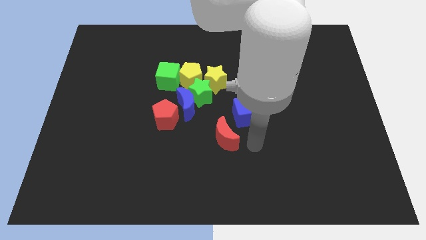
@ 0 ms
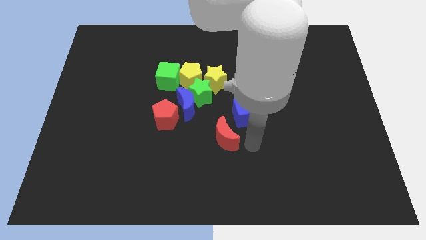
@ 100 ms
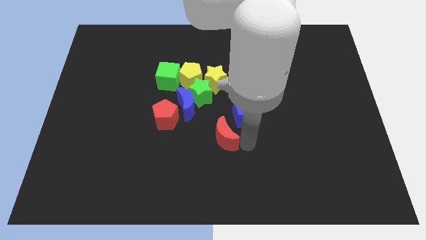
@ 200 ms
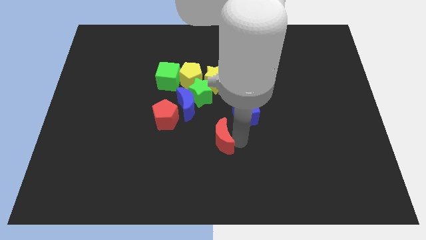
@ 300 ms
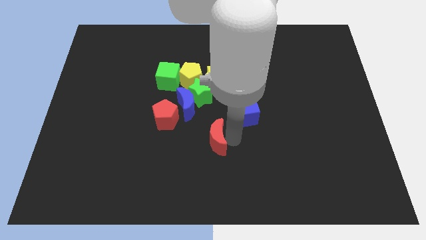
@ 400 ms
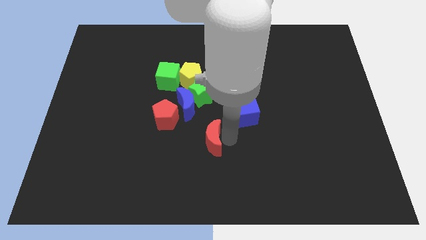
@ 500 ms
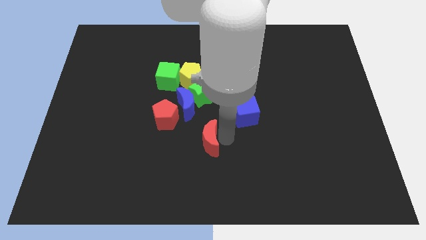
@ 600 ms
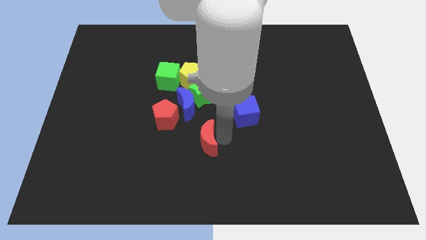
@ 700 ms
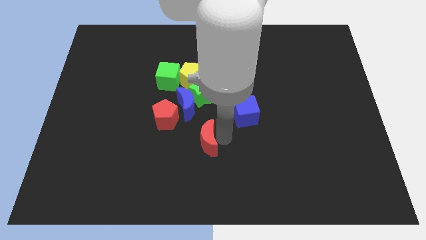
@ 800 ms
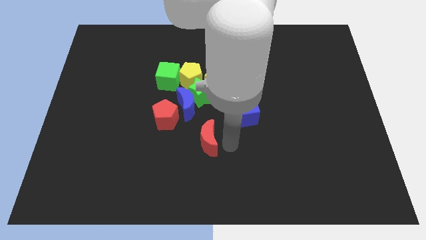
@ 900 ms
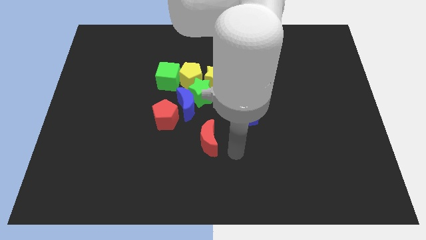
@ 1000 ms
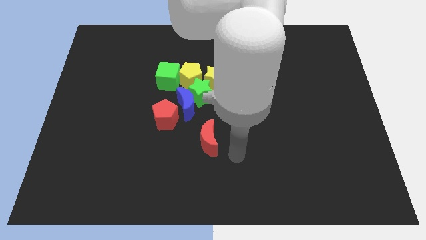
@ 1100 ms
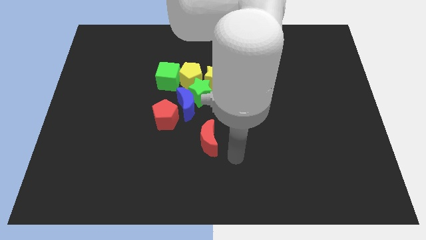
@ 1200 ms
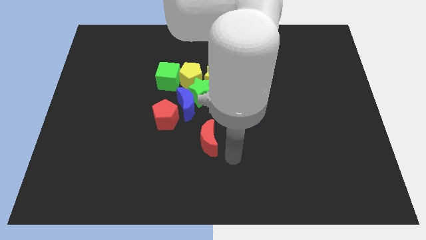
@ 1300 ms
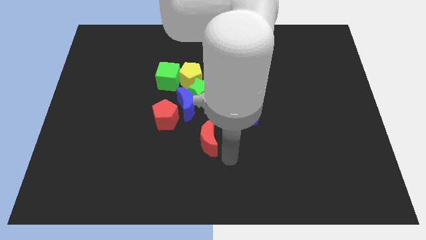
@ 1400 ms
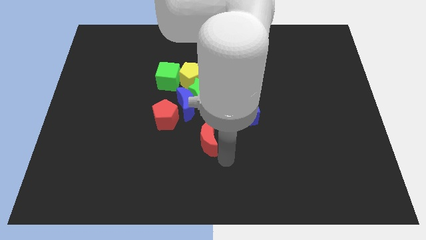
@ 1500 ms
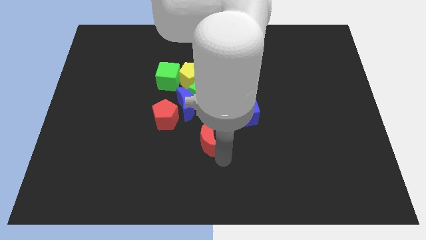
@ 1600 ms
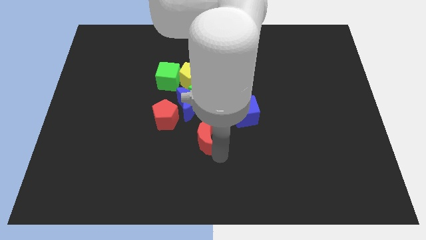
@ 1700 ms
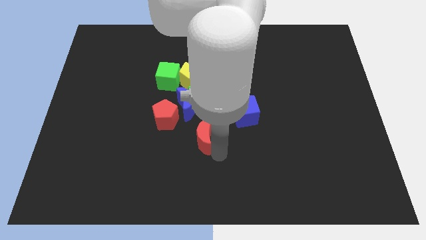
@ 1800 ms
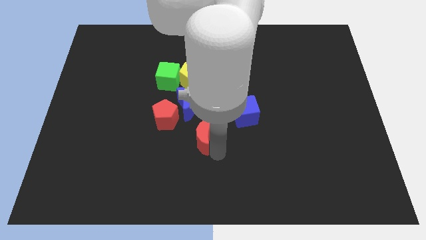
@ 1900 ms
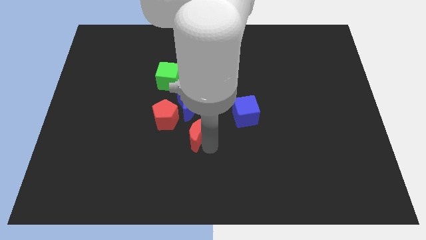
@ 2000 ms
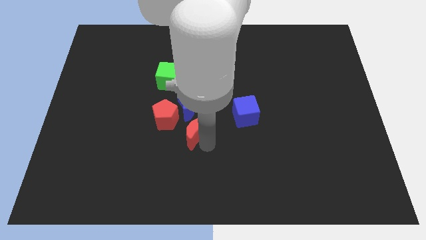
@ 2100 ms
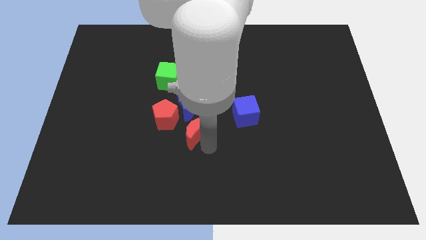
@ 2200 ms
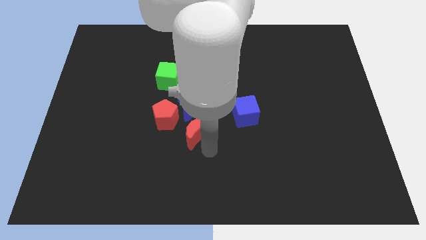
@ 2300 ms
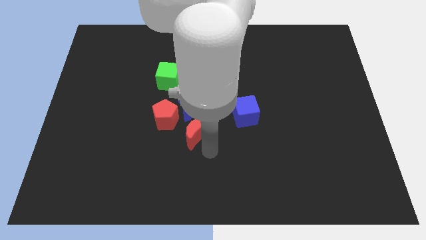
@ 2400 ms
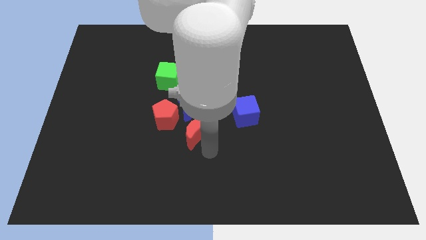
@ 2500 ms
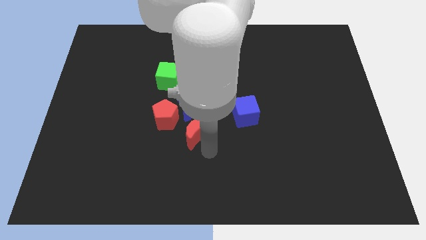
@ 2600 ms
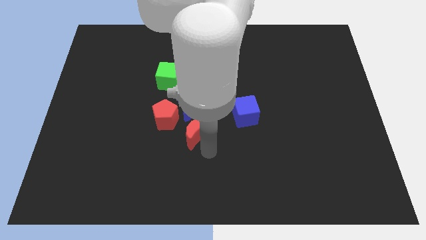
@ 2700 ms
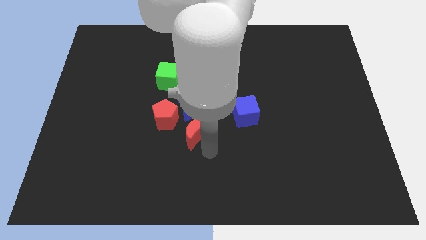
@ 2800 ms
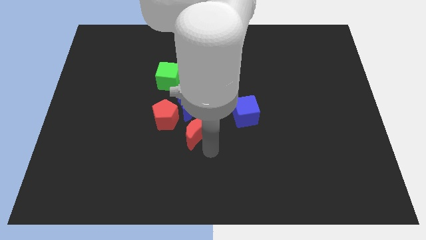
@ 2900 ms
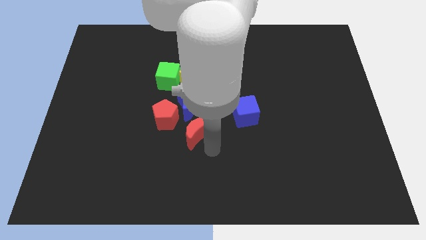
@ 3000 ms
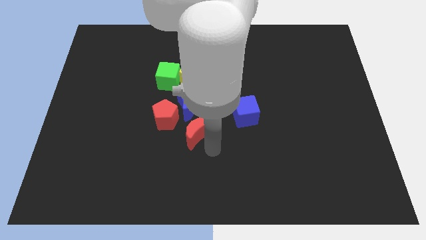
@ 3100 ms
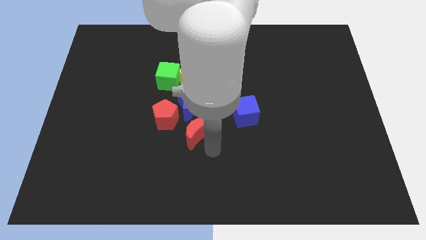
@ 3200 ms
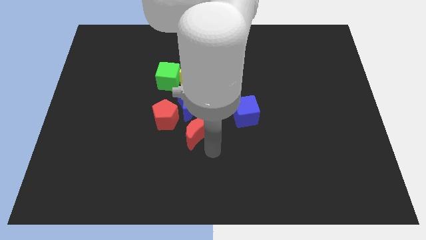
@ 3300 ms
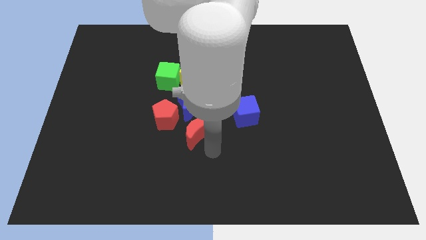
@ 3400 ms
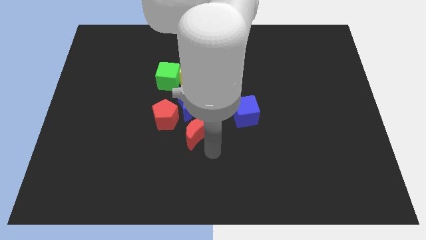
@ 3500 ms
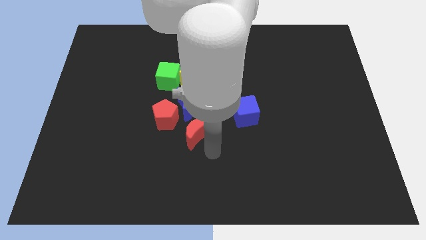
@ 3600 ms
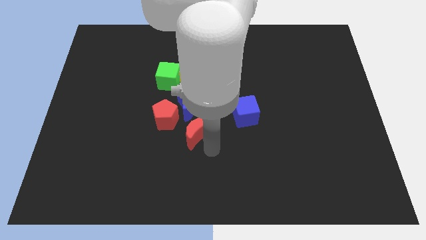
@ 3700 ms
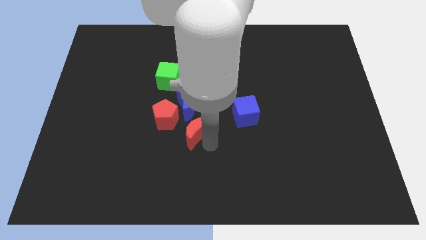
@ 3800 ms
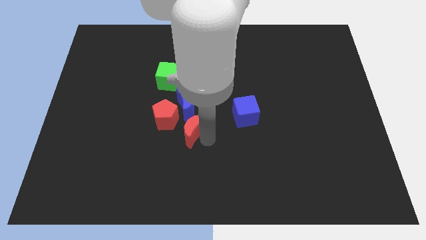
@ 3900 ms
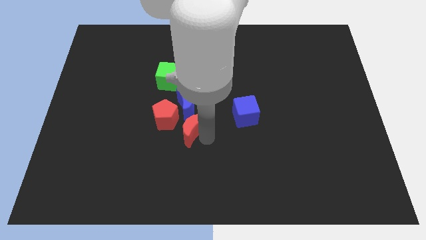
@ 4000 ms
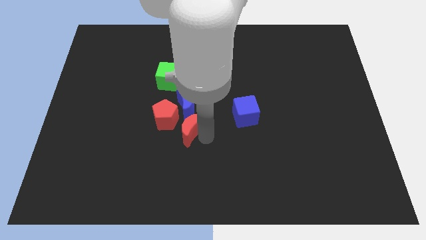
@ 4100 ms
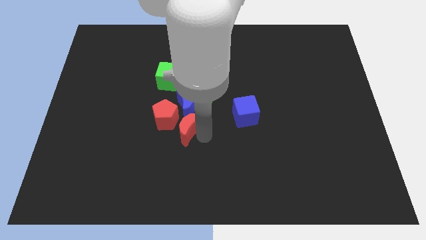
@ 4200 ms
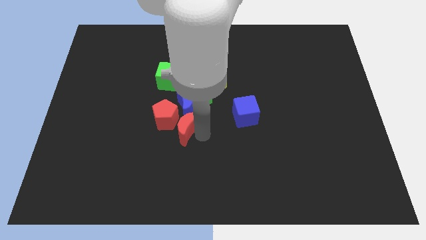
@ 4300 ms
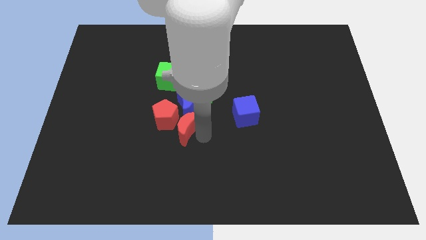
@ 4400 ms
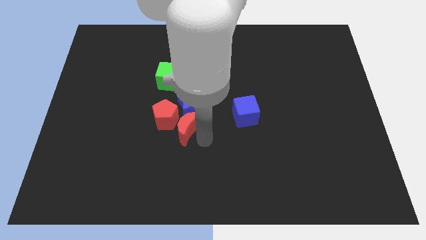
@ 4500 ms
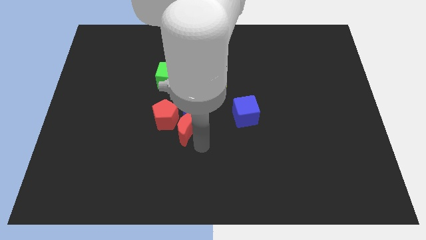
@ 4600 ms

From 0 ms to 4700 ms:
place the red crescent below the blue crescent

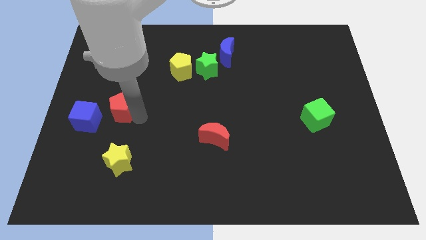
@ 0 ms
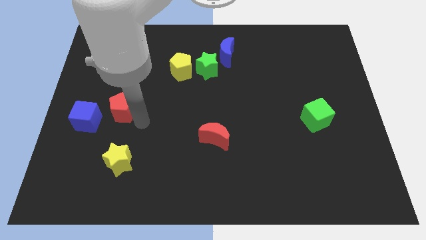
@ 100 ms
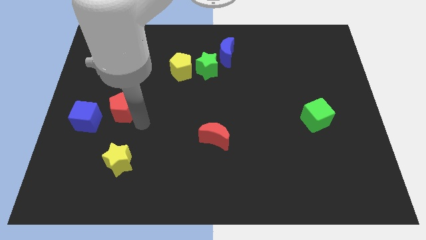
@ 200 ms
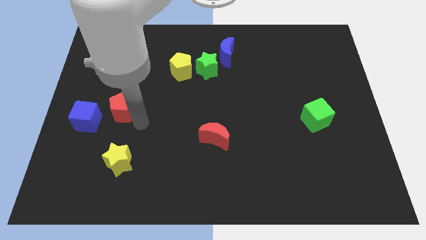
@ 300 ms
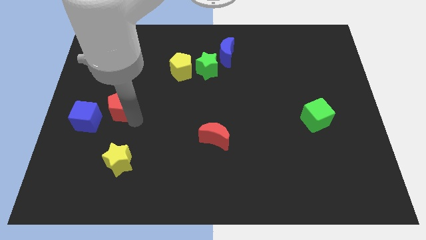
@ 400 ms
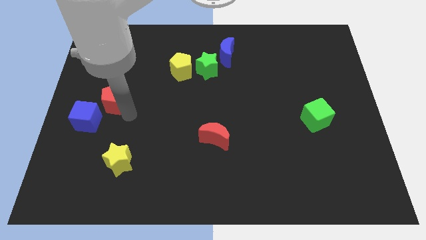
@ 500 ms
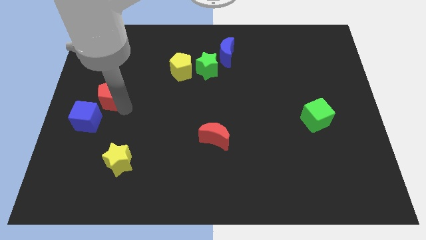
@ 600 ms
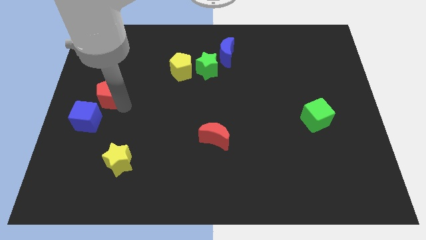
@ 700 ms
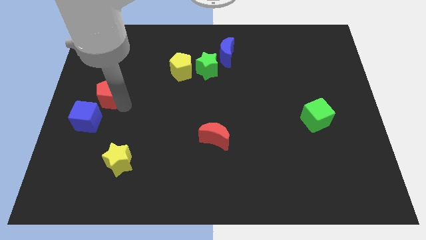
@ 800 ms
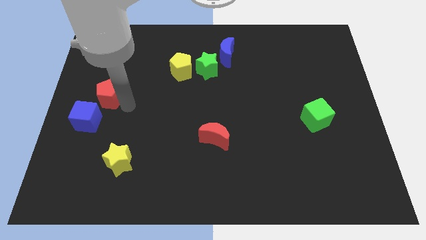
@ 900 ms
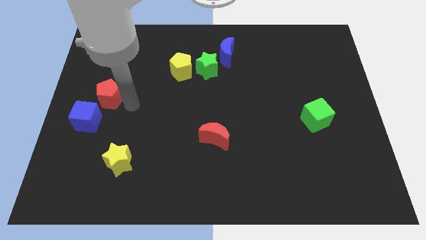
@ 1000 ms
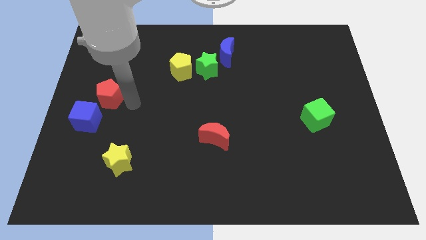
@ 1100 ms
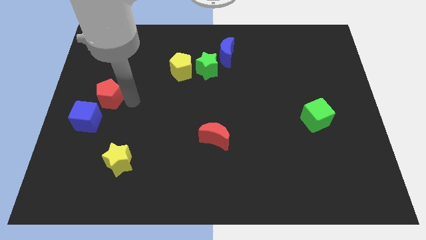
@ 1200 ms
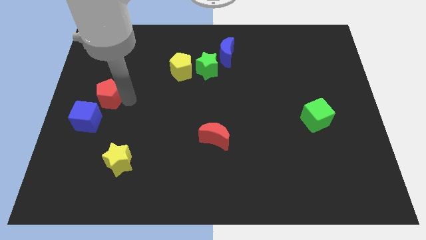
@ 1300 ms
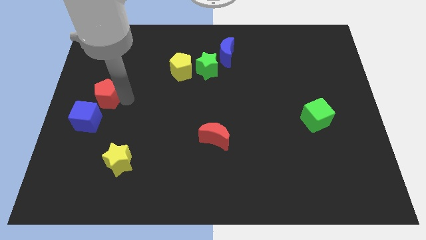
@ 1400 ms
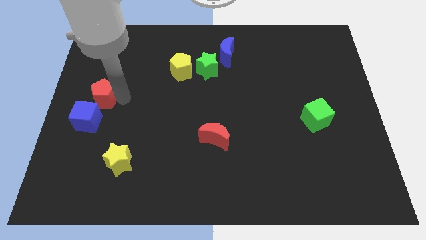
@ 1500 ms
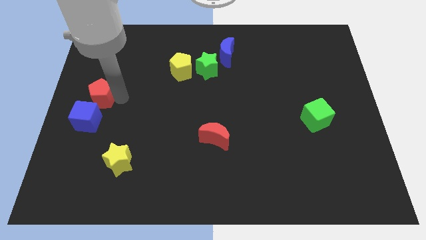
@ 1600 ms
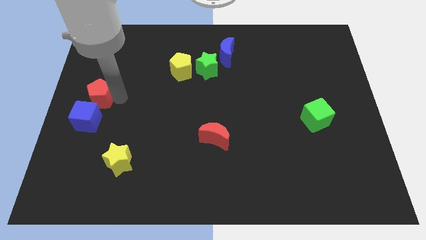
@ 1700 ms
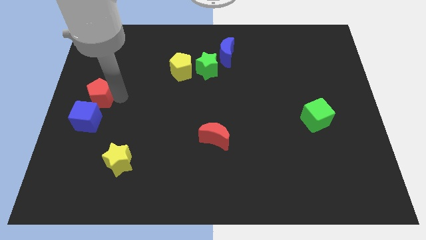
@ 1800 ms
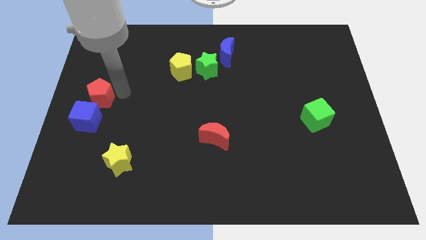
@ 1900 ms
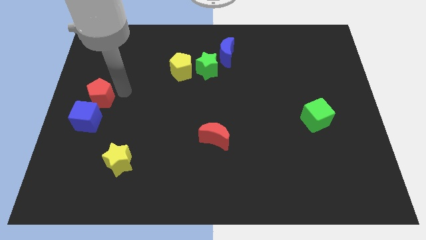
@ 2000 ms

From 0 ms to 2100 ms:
place the red pentagon to the top side of the blue cube

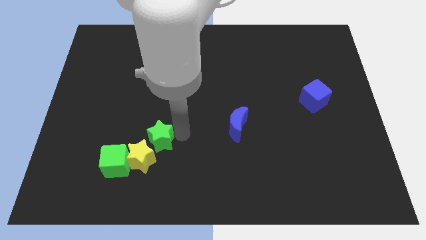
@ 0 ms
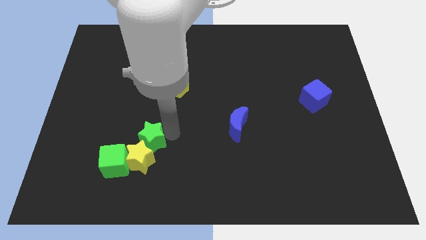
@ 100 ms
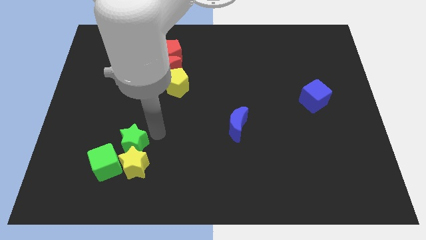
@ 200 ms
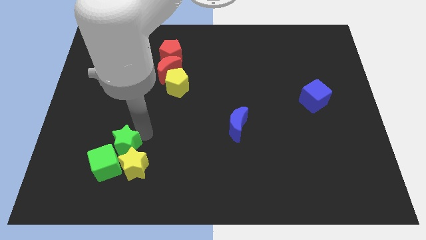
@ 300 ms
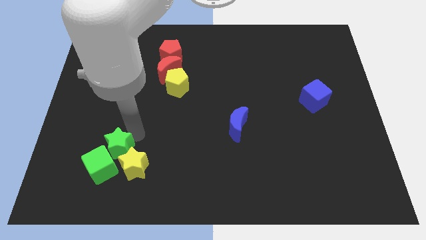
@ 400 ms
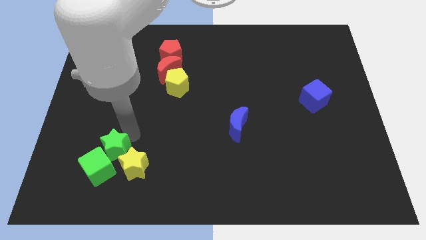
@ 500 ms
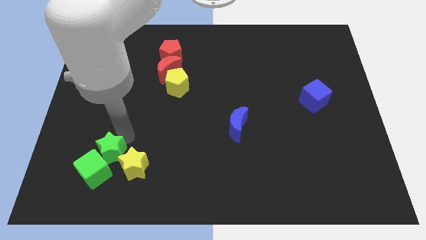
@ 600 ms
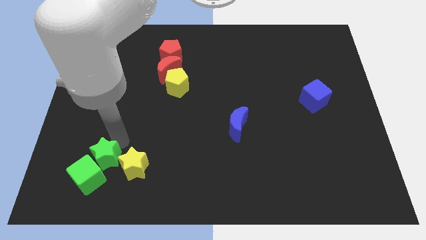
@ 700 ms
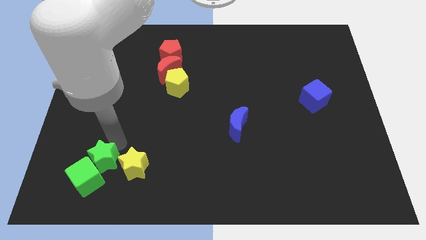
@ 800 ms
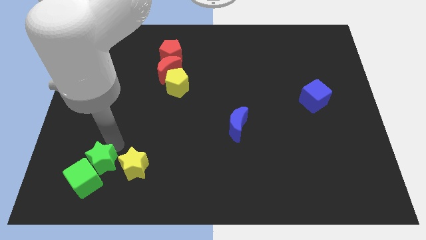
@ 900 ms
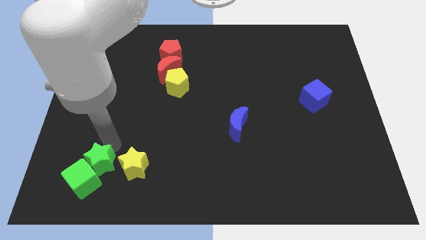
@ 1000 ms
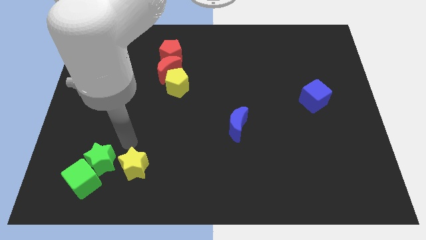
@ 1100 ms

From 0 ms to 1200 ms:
push green star into the green cube

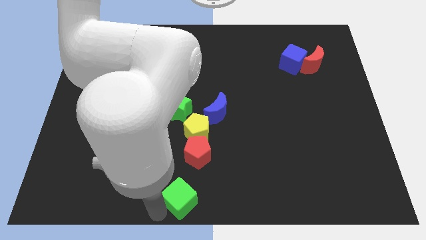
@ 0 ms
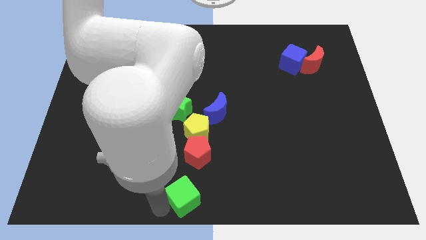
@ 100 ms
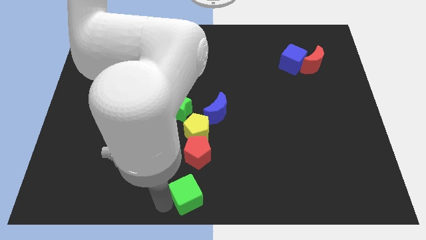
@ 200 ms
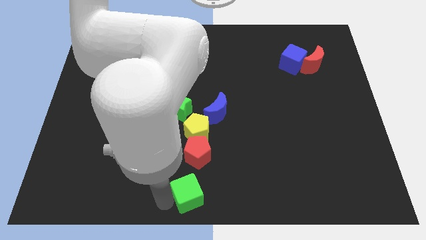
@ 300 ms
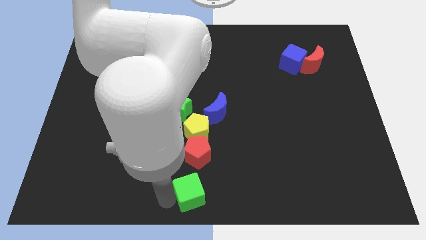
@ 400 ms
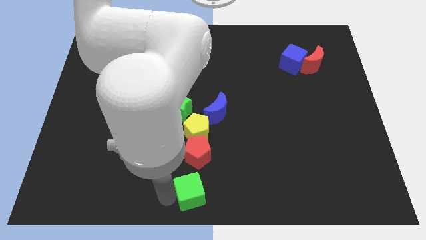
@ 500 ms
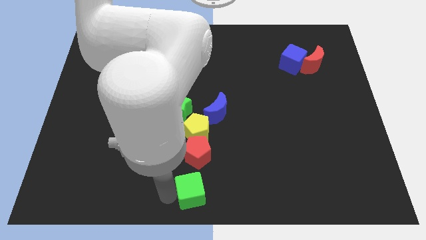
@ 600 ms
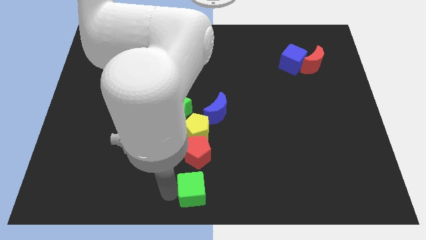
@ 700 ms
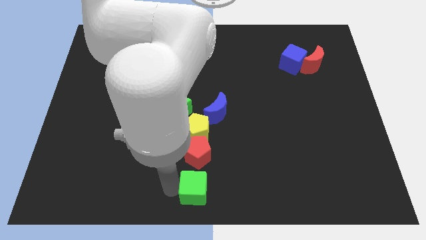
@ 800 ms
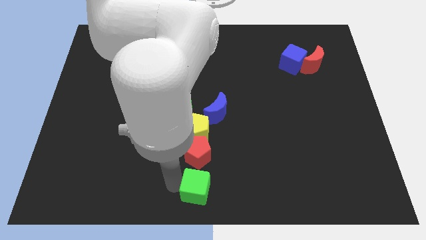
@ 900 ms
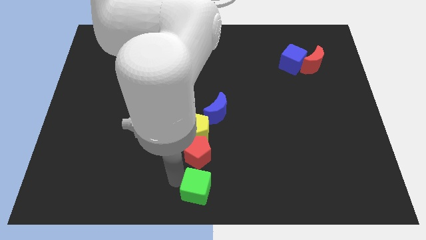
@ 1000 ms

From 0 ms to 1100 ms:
put green cube below red pentagon
